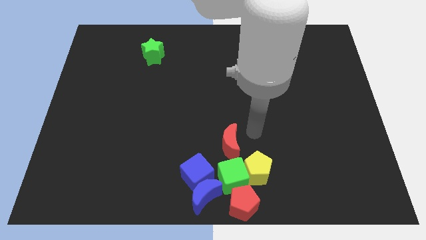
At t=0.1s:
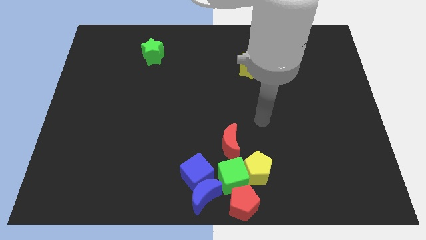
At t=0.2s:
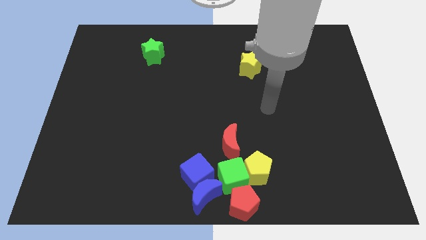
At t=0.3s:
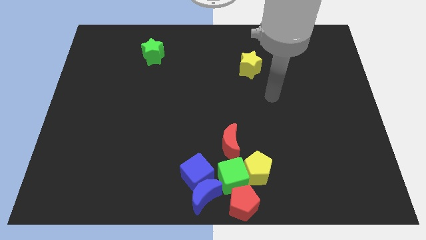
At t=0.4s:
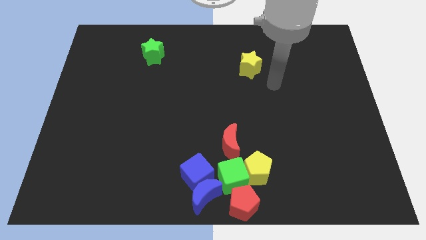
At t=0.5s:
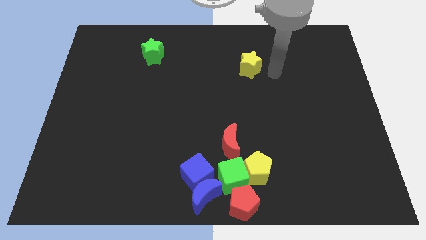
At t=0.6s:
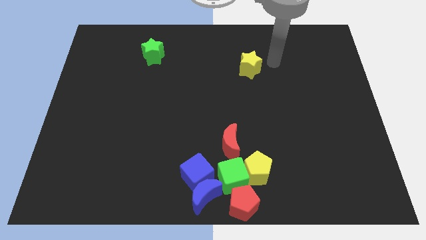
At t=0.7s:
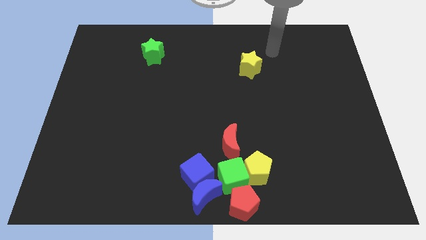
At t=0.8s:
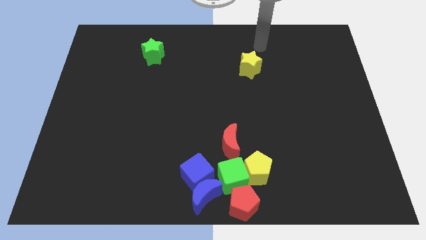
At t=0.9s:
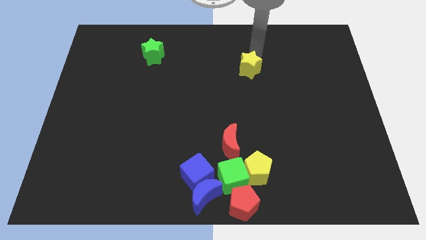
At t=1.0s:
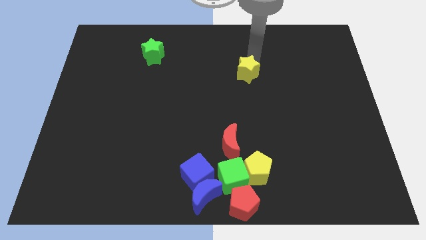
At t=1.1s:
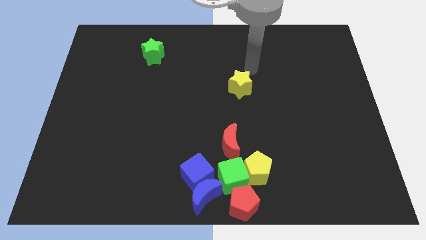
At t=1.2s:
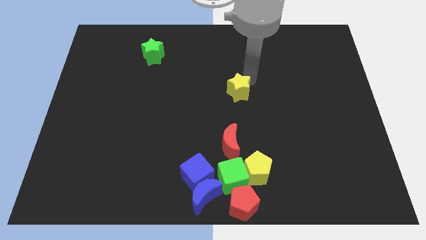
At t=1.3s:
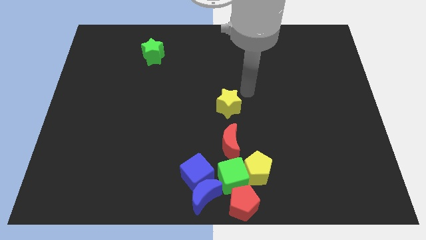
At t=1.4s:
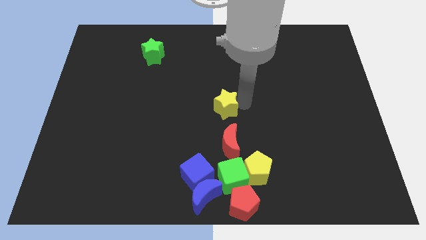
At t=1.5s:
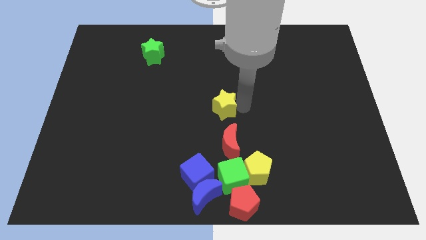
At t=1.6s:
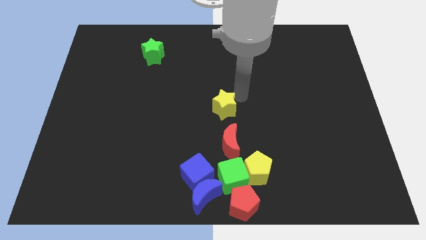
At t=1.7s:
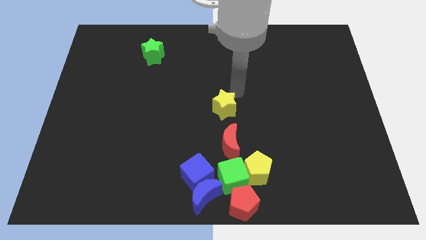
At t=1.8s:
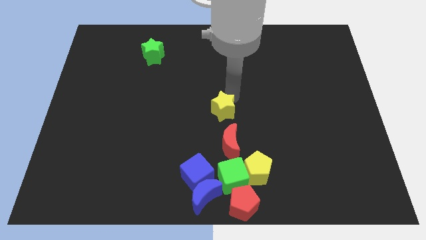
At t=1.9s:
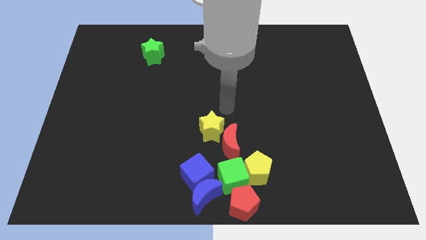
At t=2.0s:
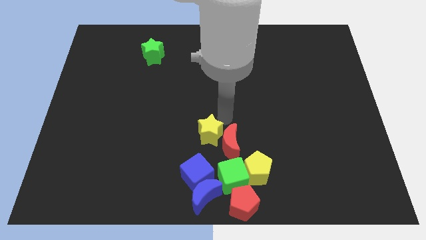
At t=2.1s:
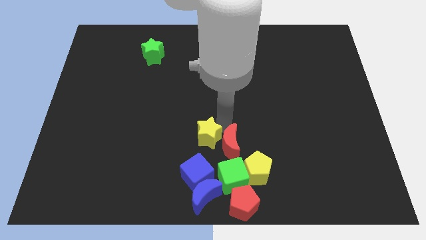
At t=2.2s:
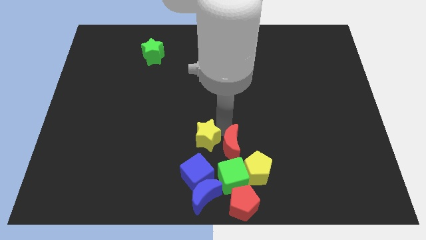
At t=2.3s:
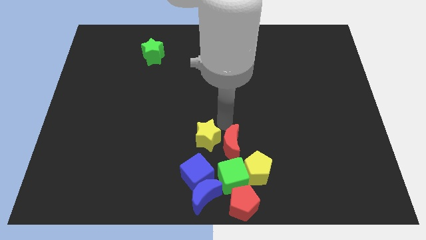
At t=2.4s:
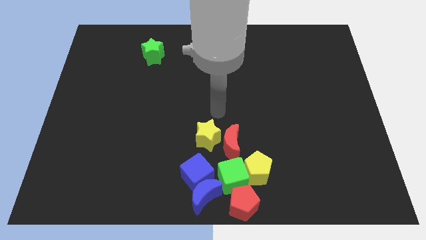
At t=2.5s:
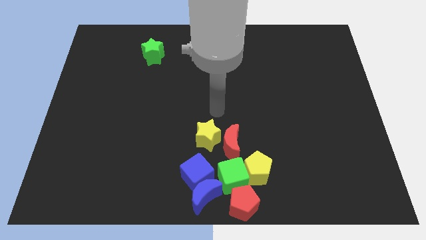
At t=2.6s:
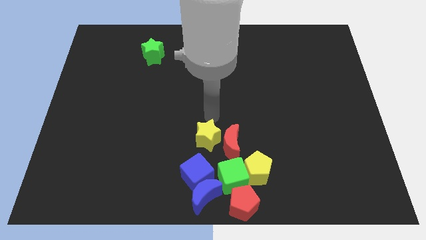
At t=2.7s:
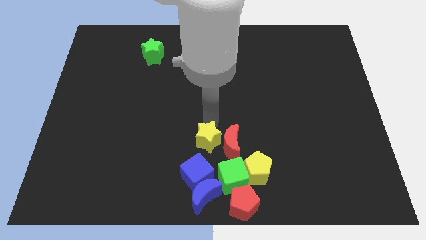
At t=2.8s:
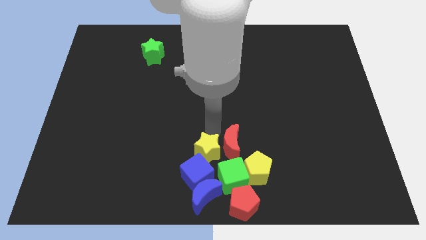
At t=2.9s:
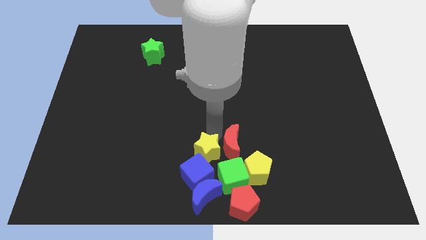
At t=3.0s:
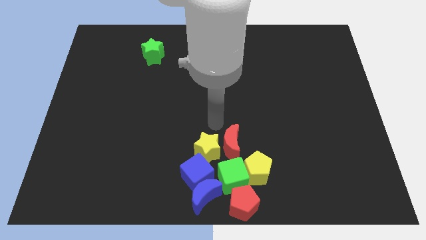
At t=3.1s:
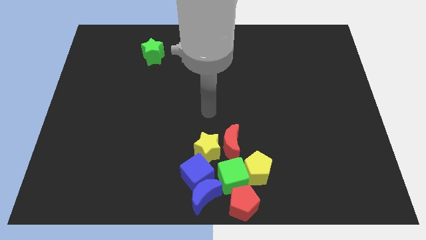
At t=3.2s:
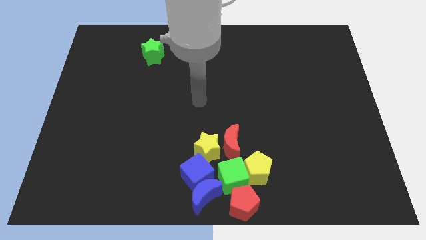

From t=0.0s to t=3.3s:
push the yellow star to the left side of the red crescent

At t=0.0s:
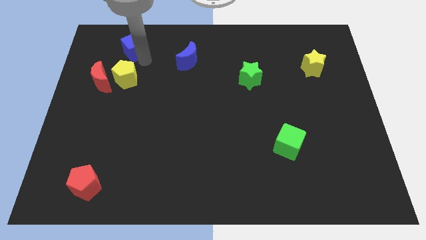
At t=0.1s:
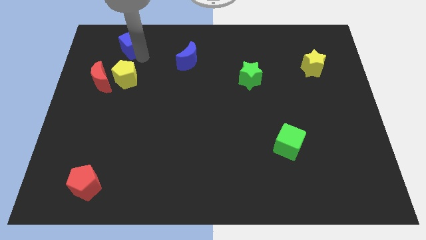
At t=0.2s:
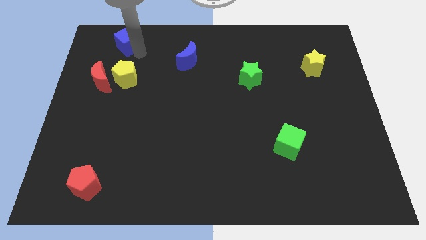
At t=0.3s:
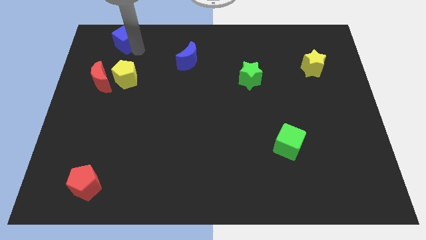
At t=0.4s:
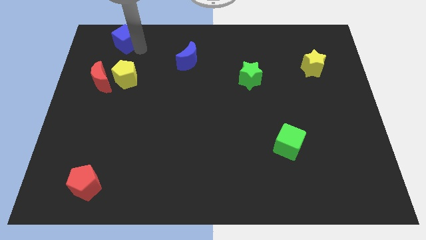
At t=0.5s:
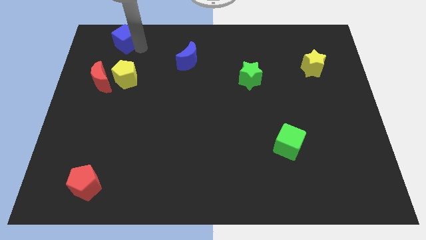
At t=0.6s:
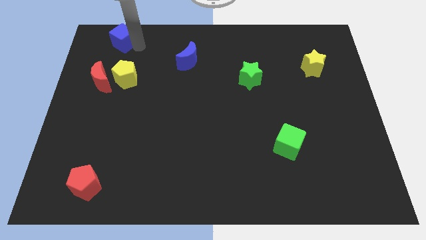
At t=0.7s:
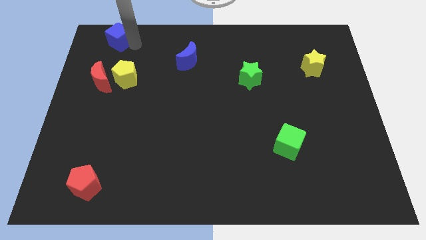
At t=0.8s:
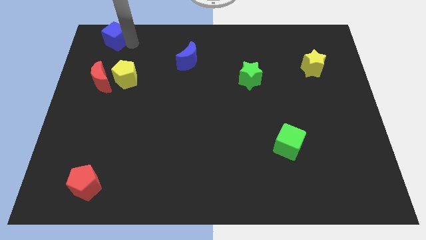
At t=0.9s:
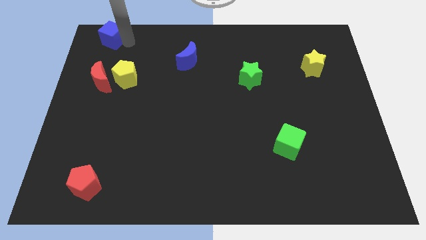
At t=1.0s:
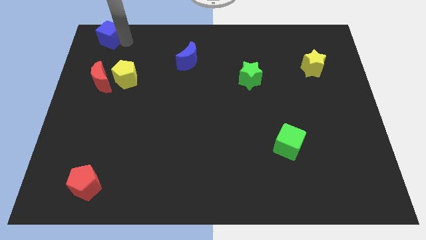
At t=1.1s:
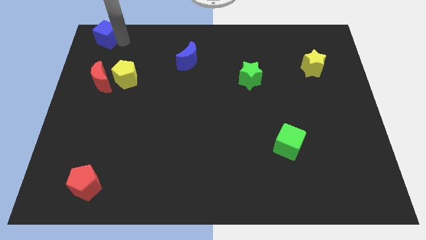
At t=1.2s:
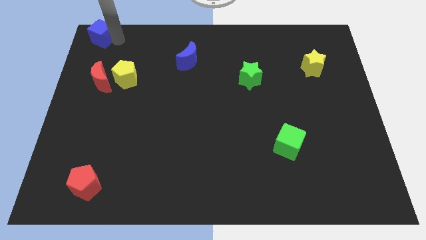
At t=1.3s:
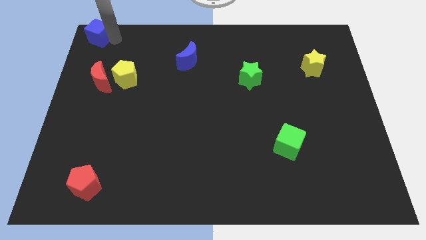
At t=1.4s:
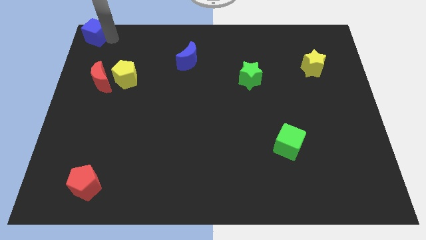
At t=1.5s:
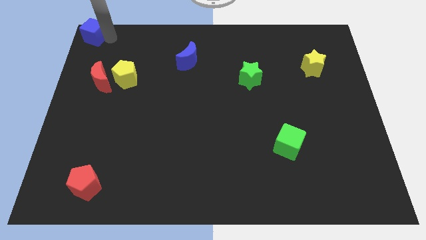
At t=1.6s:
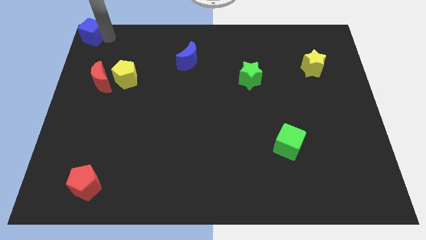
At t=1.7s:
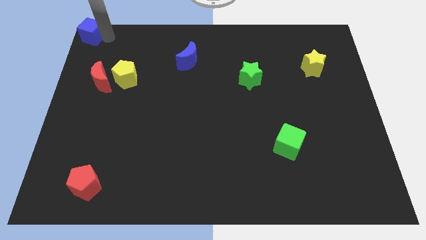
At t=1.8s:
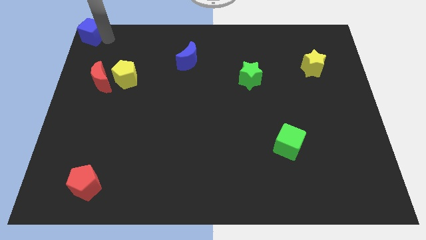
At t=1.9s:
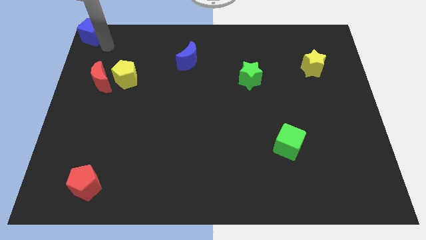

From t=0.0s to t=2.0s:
push blue cube towards top left corner of the board

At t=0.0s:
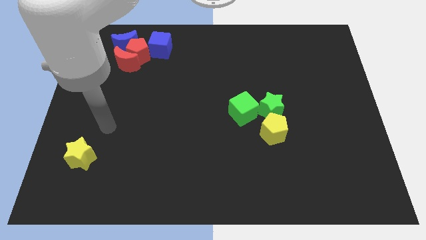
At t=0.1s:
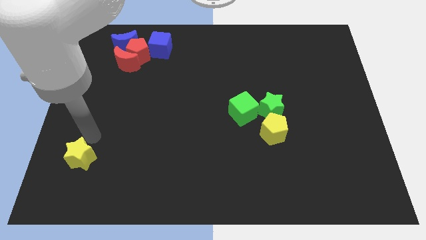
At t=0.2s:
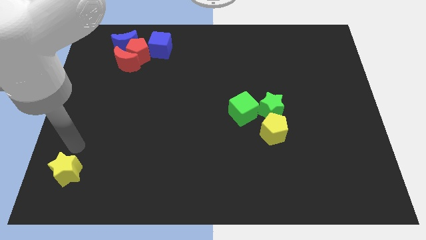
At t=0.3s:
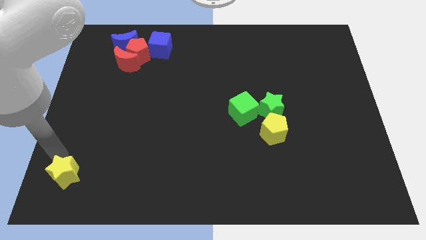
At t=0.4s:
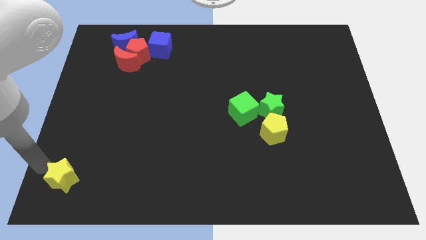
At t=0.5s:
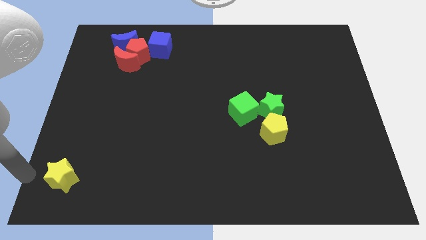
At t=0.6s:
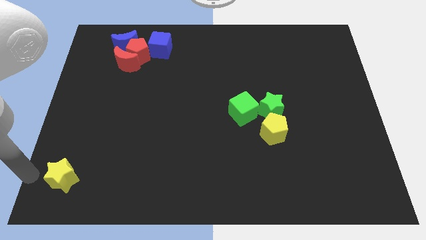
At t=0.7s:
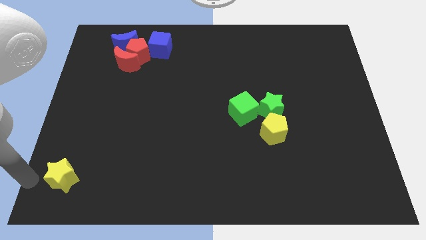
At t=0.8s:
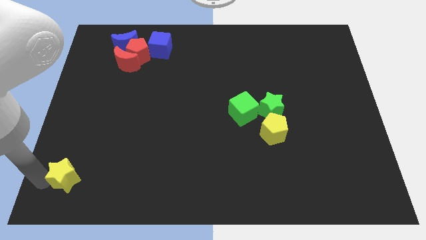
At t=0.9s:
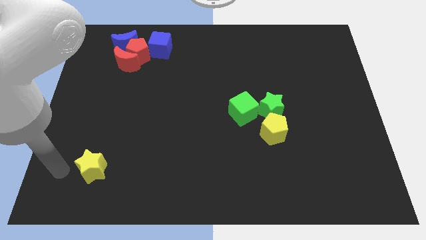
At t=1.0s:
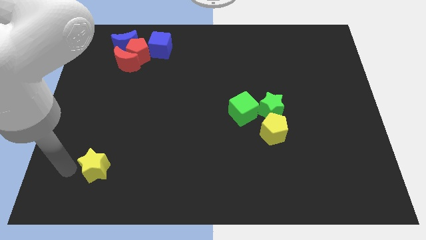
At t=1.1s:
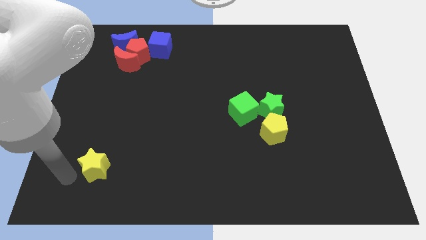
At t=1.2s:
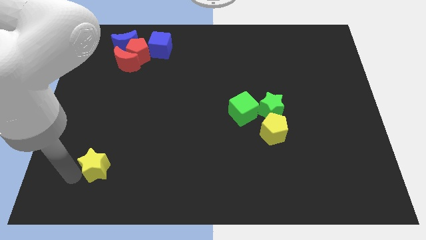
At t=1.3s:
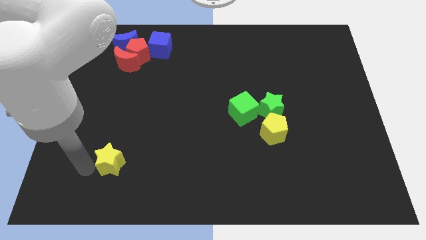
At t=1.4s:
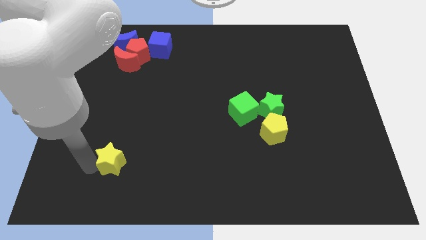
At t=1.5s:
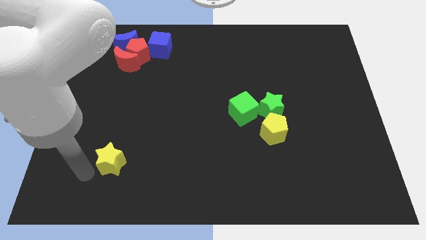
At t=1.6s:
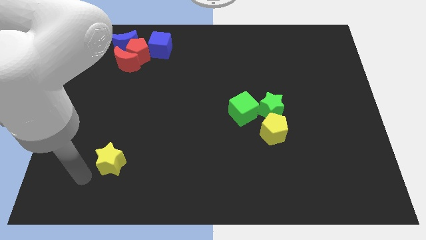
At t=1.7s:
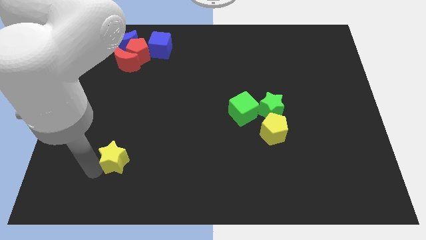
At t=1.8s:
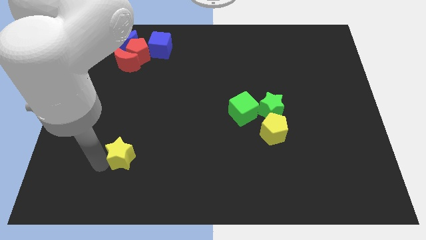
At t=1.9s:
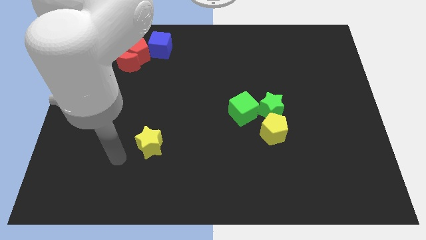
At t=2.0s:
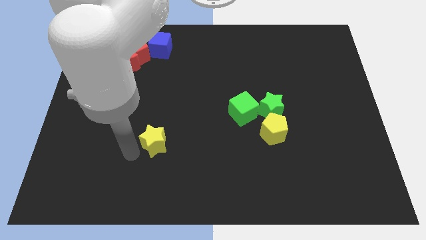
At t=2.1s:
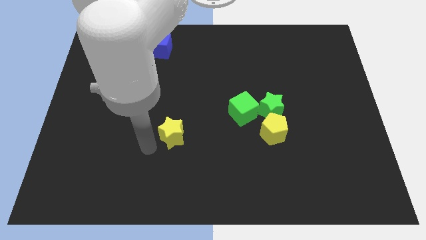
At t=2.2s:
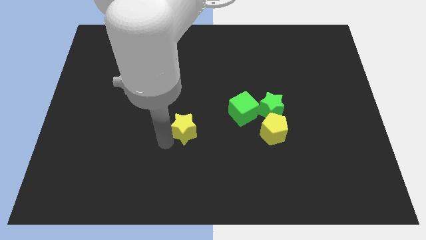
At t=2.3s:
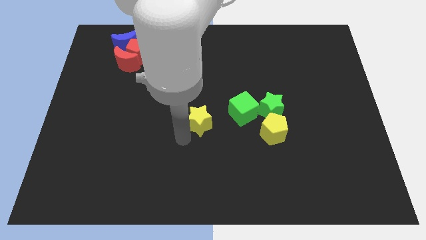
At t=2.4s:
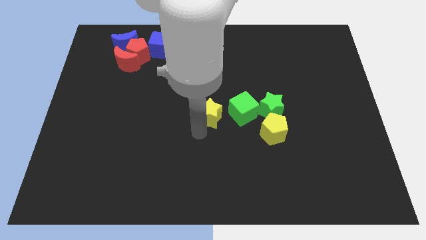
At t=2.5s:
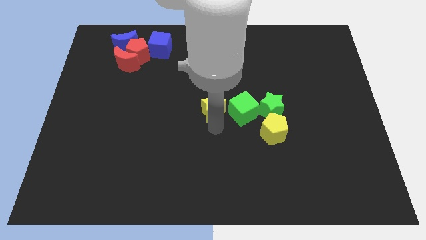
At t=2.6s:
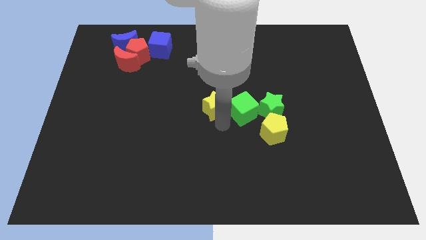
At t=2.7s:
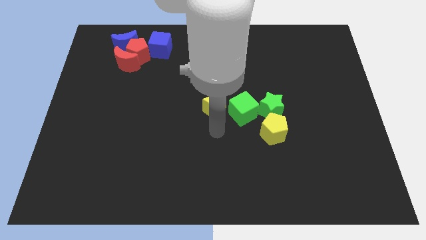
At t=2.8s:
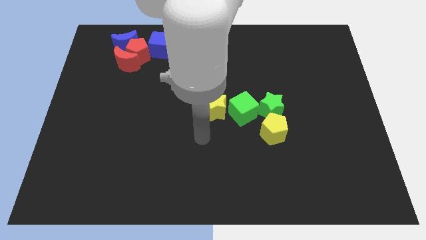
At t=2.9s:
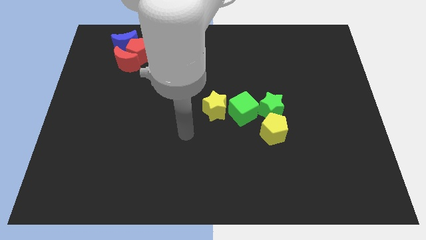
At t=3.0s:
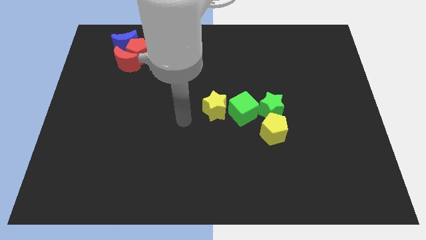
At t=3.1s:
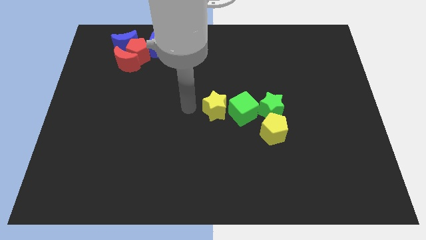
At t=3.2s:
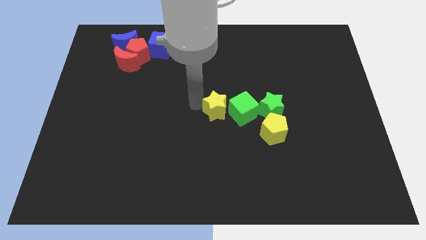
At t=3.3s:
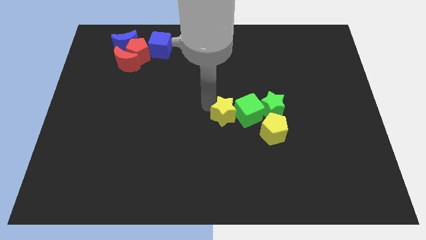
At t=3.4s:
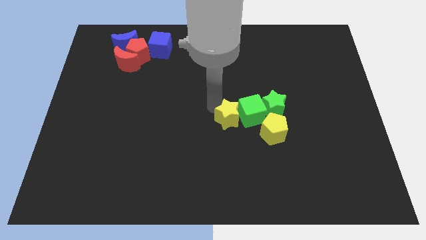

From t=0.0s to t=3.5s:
place the yellow star left to the green cube
